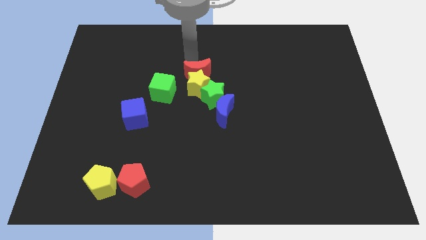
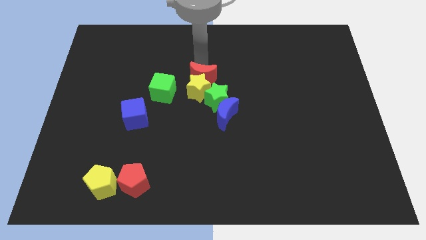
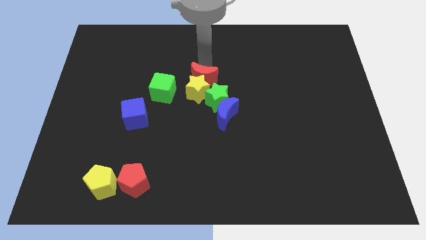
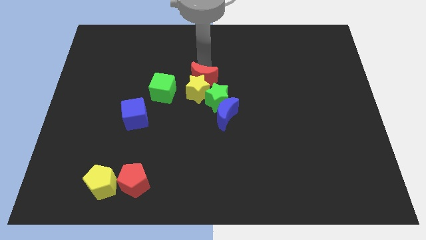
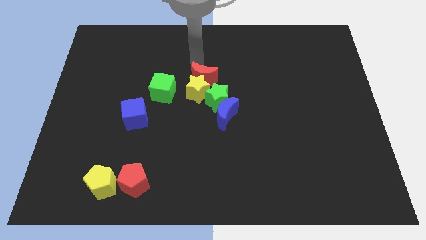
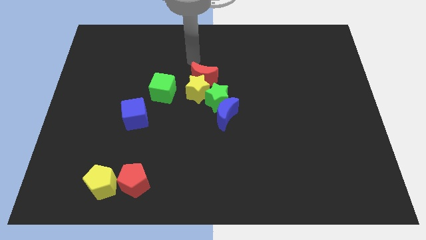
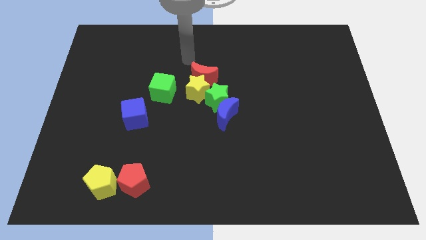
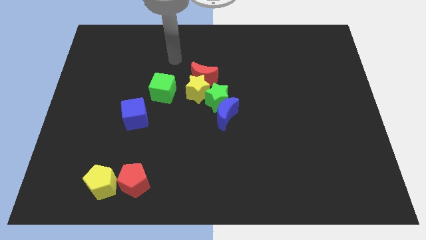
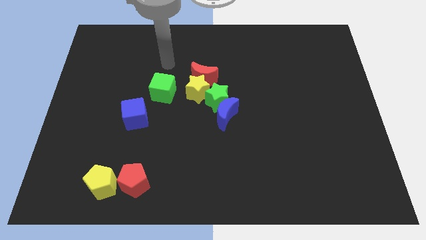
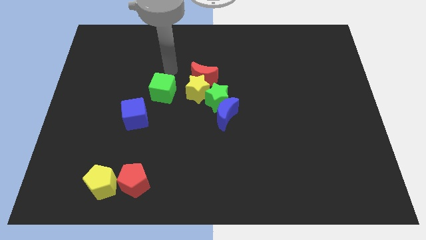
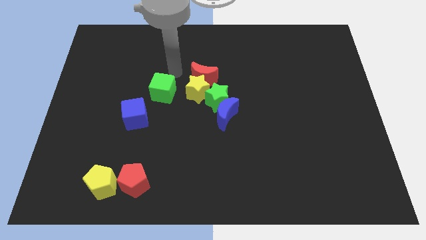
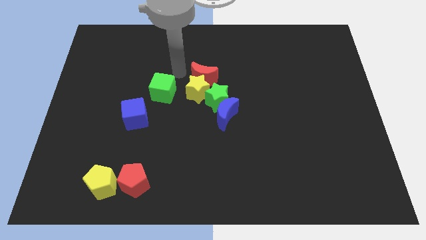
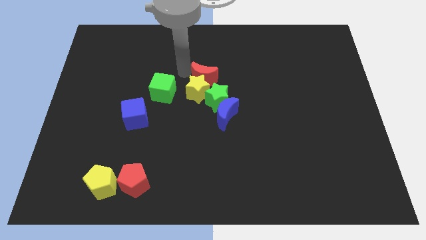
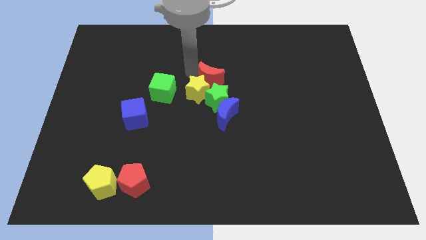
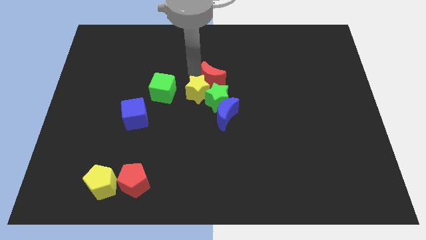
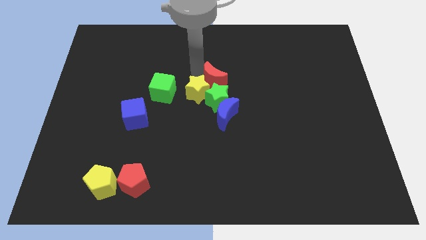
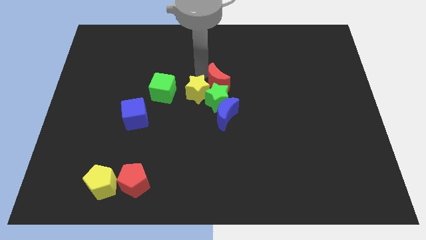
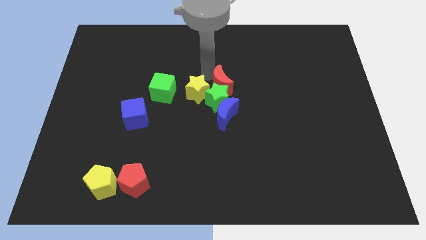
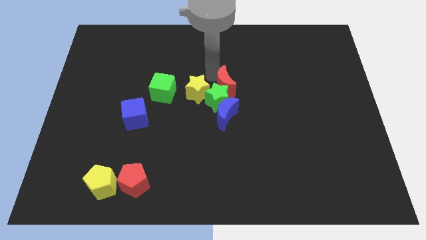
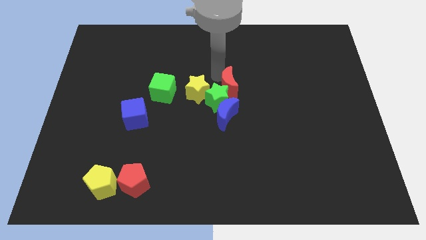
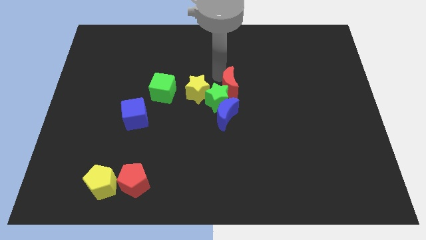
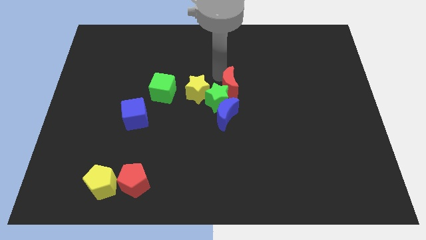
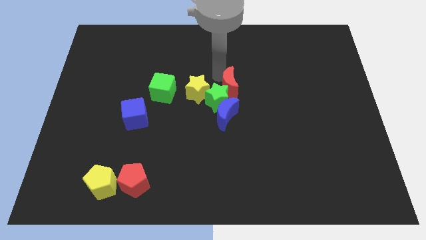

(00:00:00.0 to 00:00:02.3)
place the red moon at the top of the green star

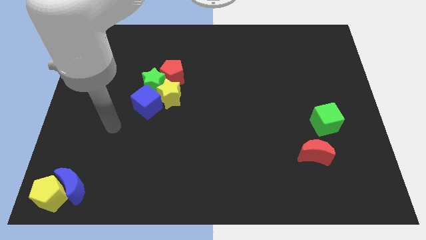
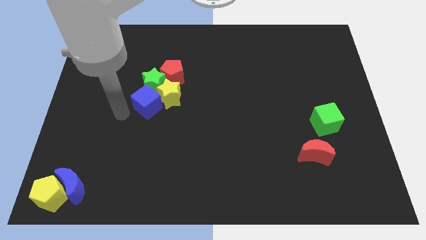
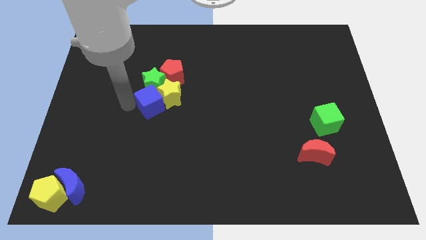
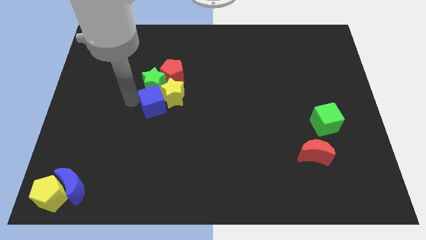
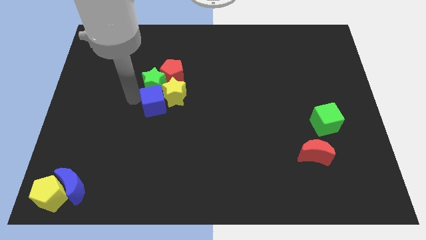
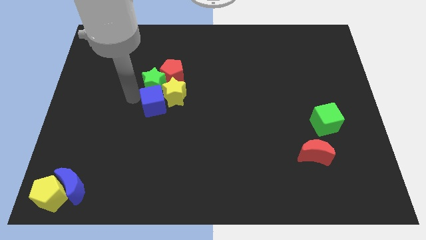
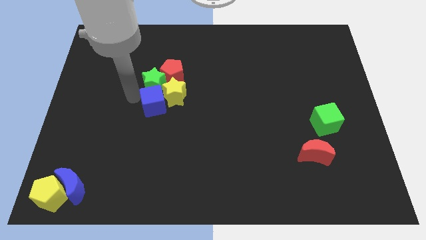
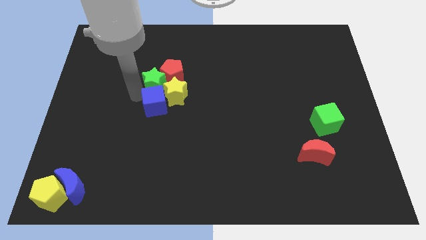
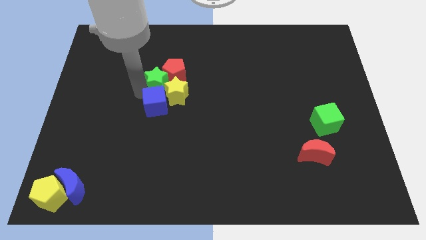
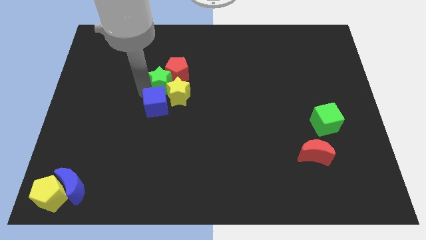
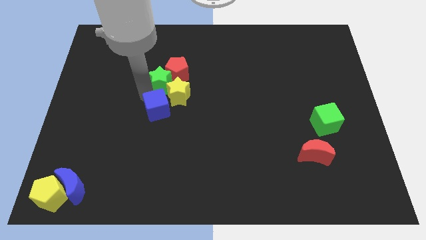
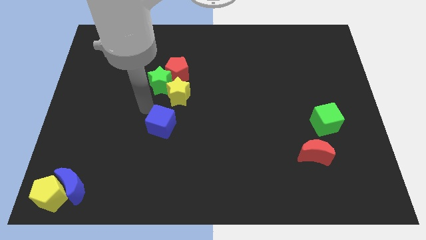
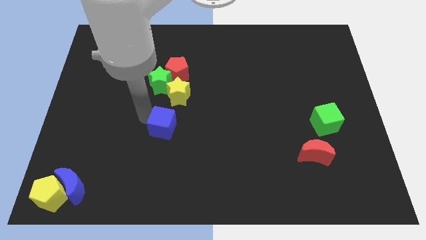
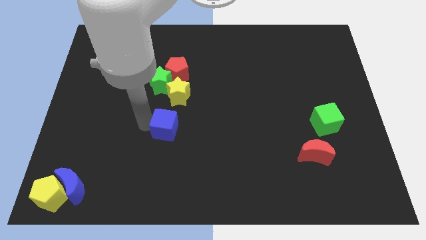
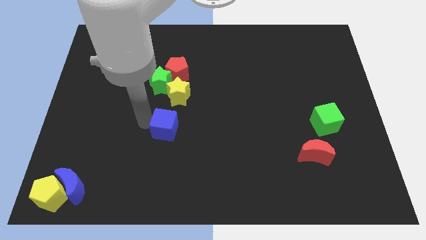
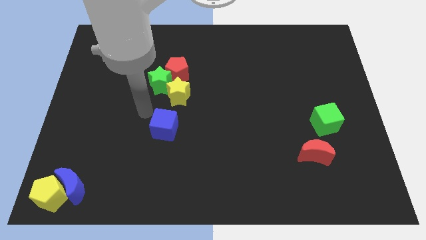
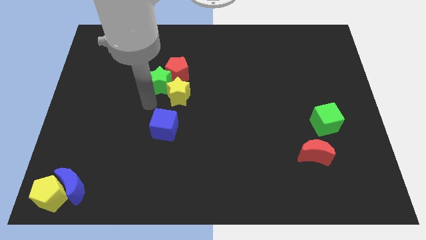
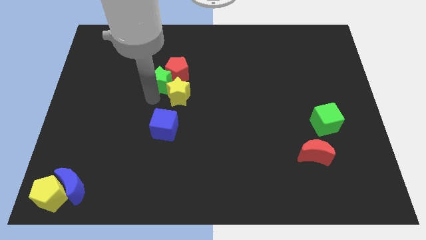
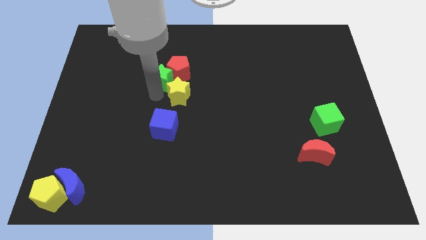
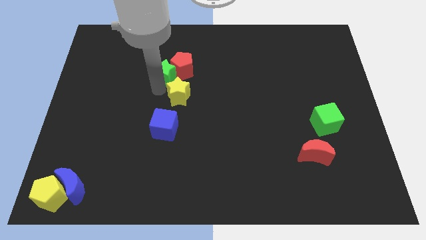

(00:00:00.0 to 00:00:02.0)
move the blue cube away from the green star

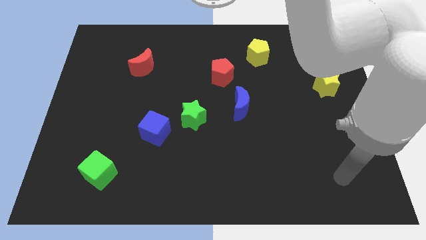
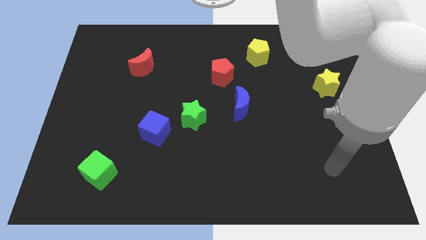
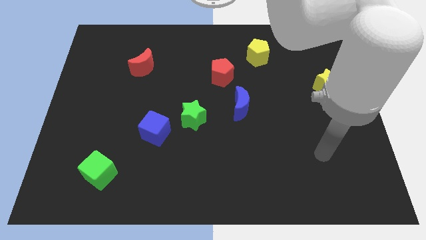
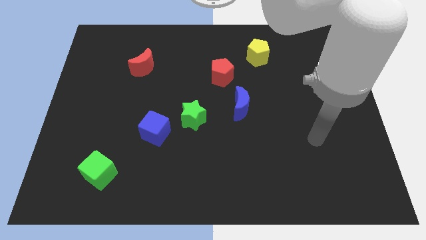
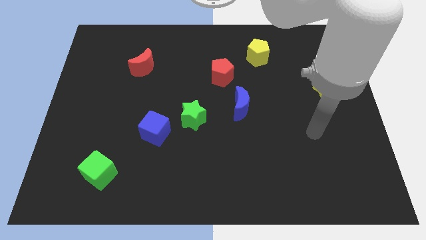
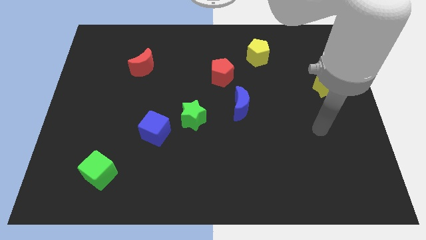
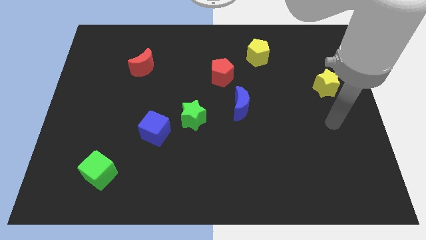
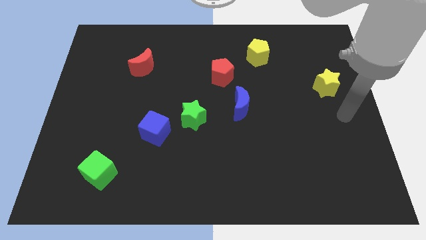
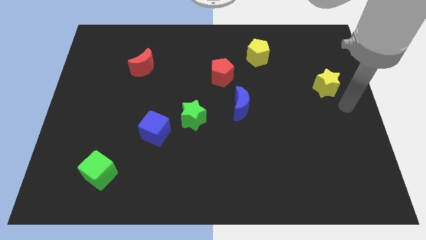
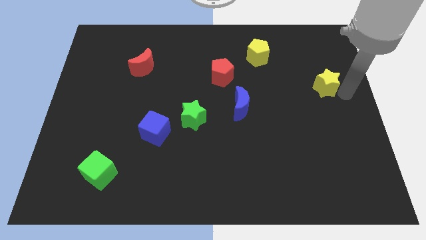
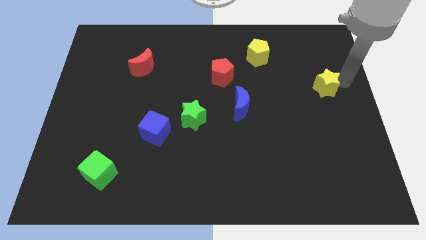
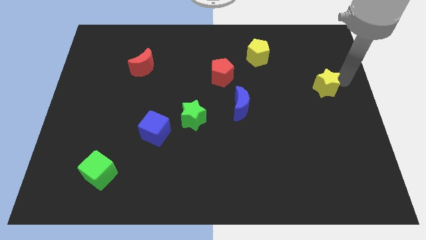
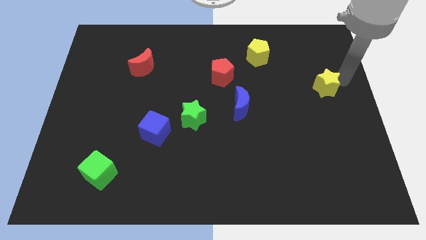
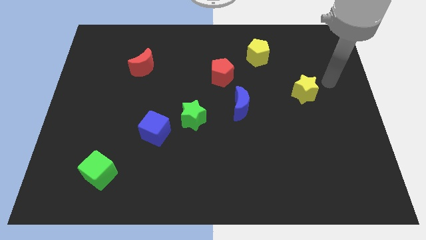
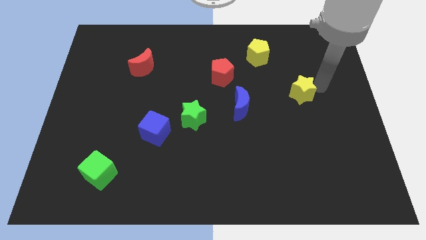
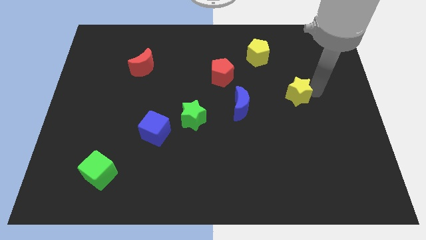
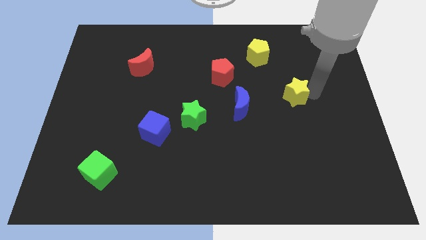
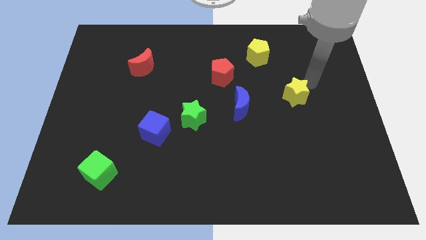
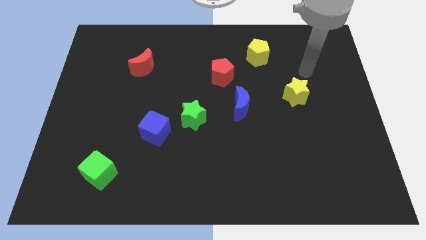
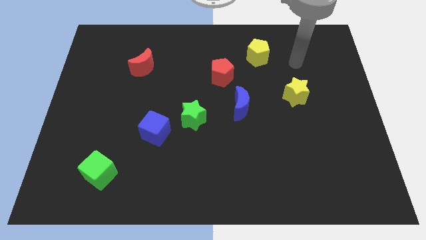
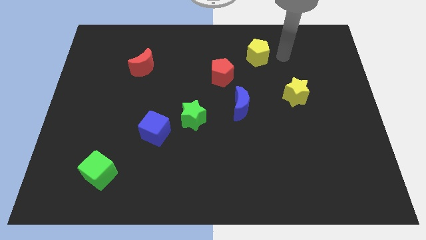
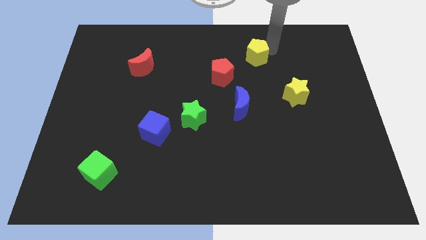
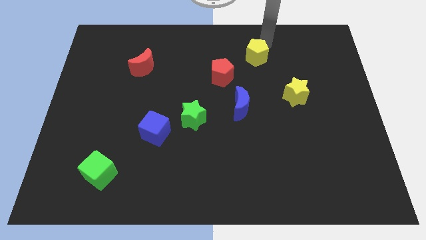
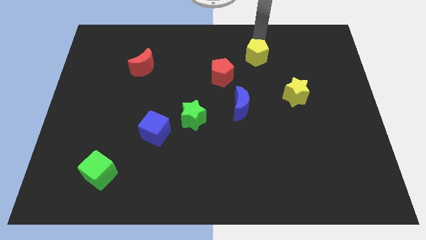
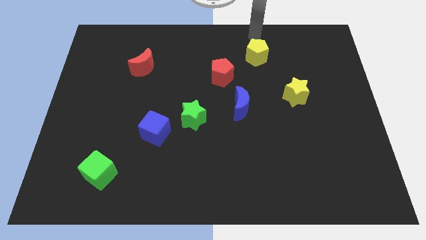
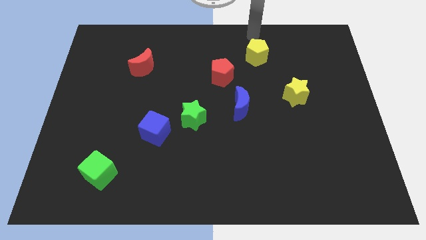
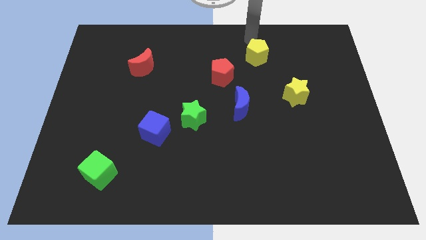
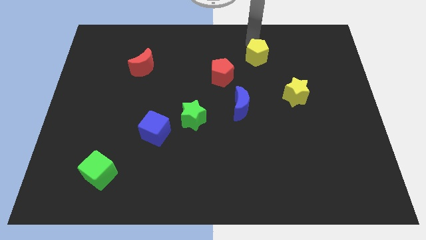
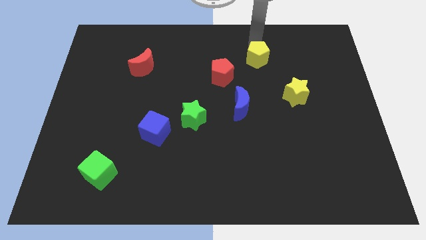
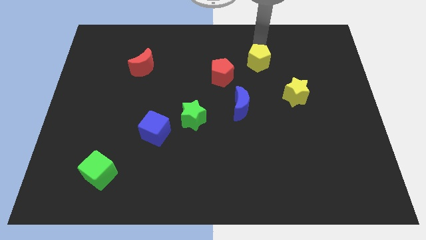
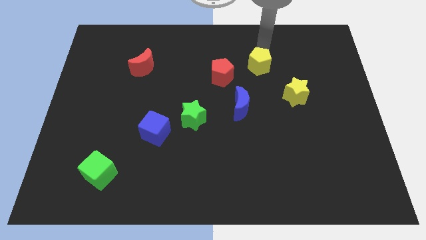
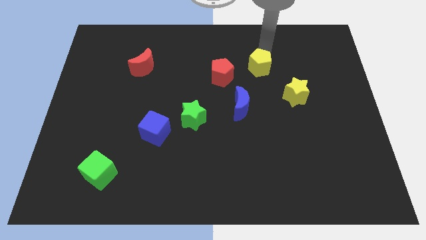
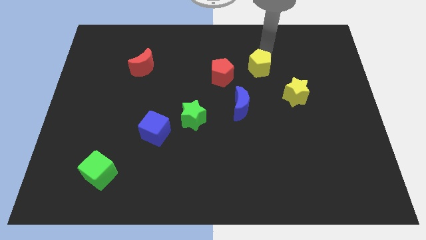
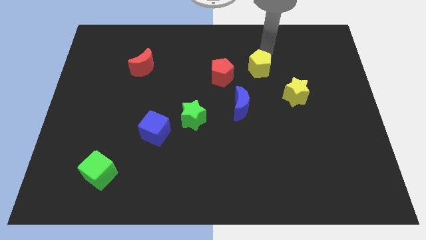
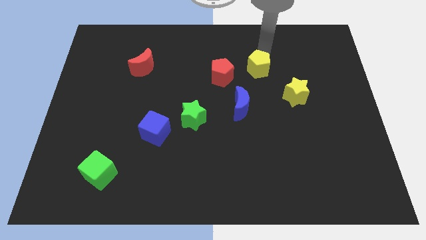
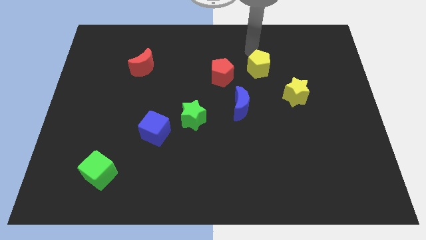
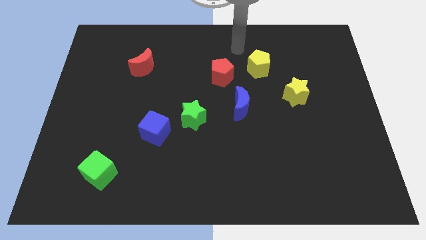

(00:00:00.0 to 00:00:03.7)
move the yellow blocks towards the bottom side

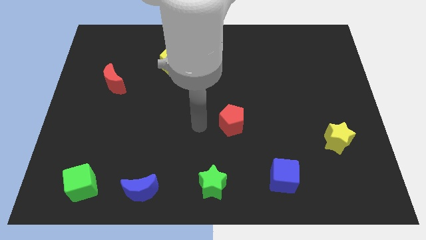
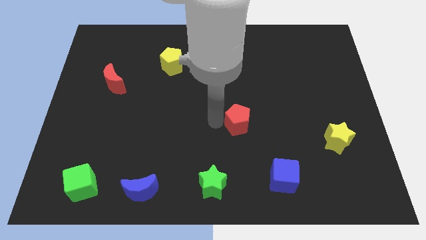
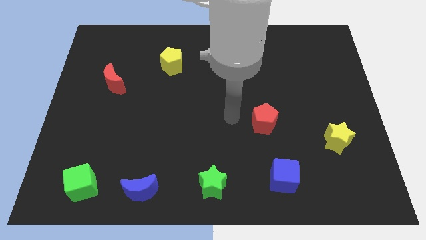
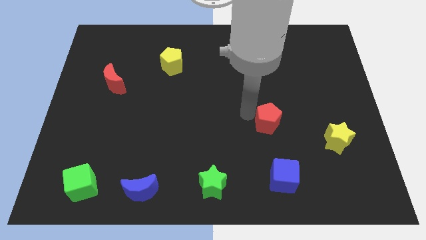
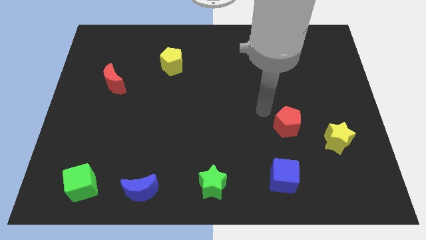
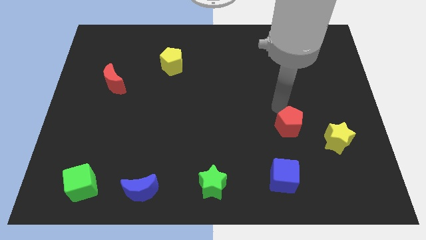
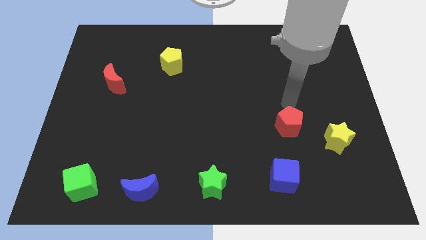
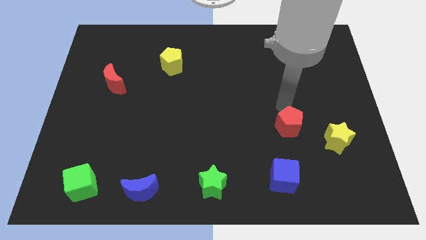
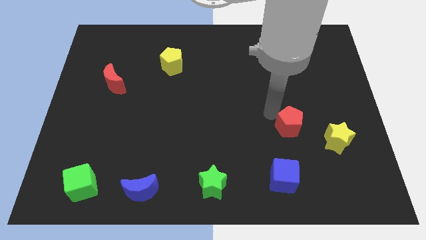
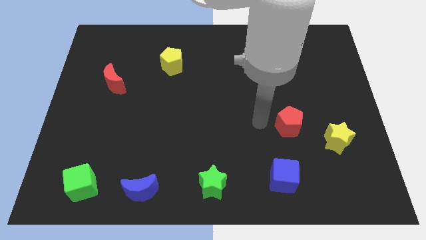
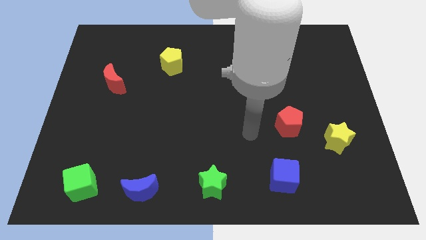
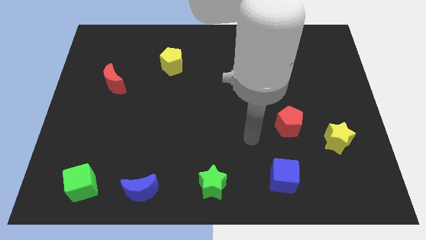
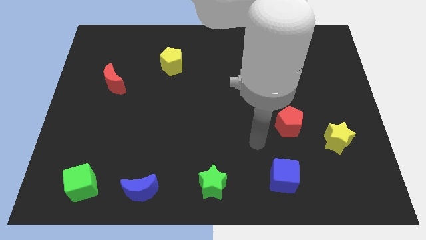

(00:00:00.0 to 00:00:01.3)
move the red pentagon to the right of the board
